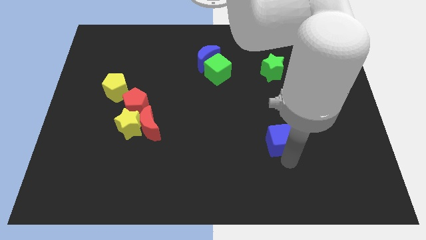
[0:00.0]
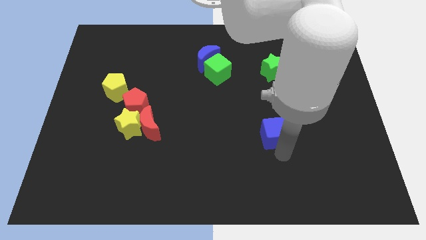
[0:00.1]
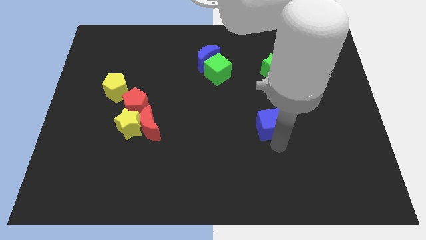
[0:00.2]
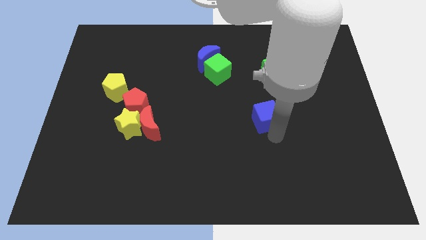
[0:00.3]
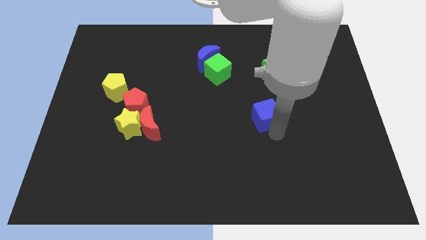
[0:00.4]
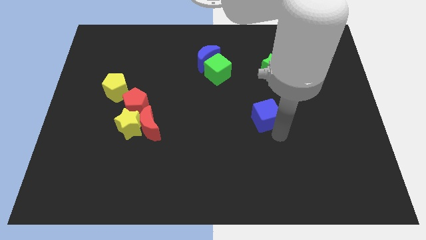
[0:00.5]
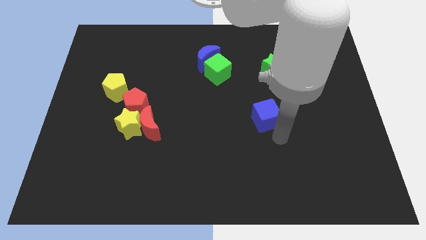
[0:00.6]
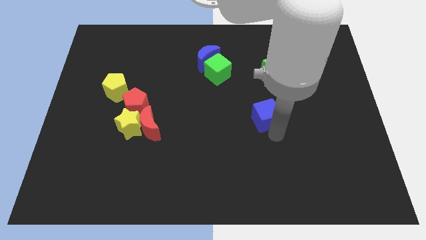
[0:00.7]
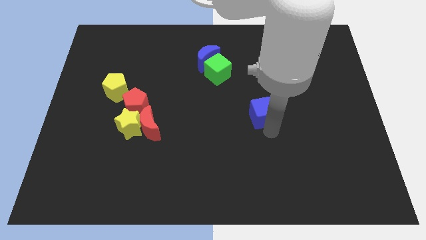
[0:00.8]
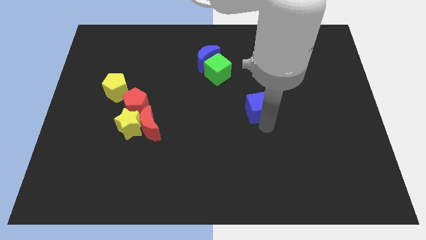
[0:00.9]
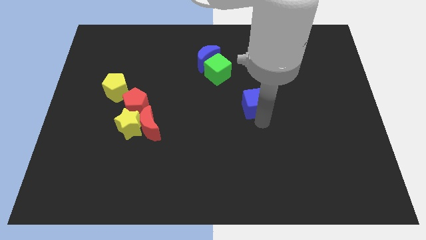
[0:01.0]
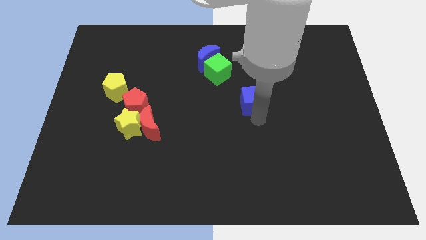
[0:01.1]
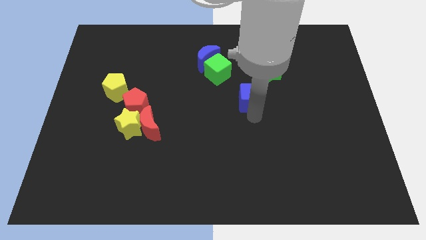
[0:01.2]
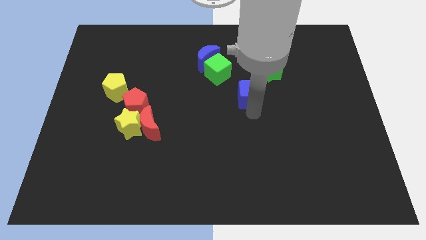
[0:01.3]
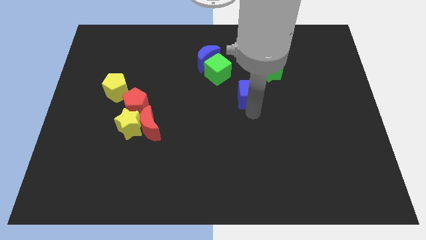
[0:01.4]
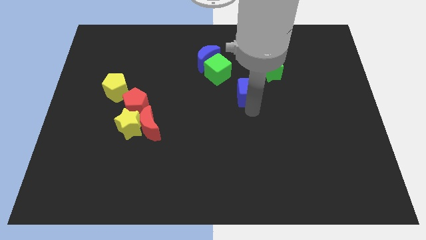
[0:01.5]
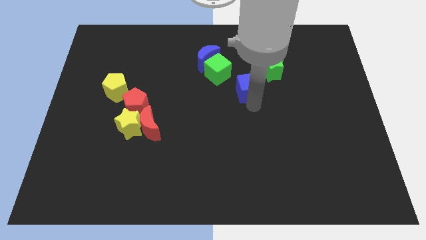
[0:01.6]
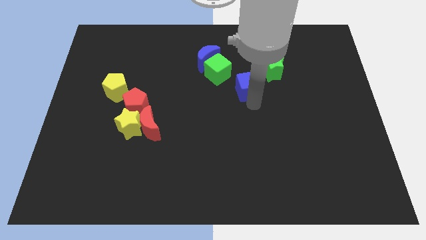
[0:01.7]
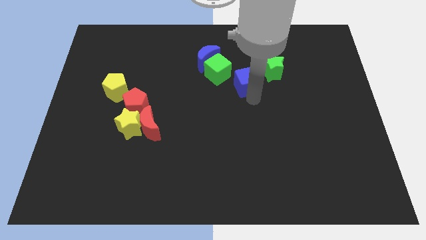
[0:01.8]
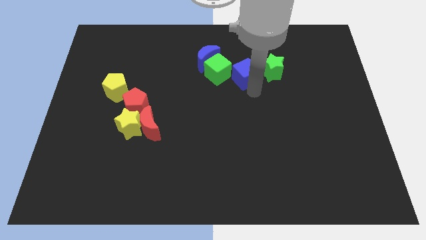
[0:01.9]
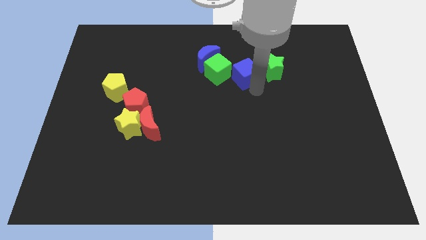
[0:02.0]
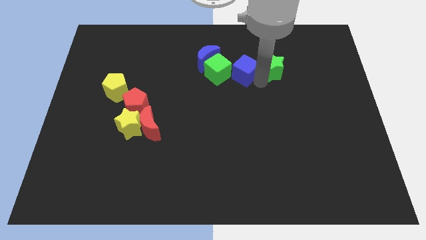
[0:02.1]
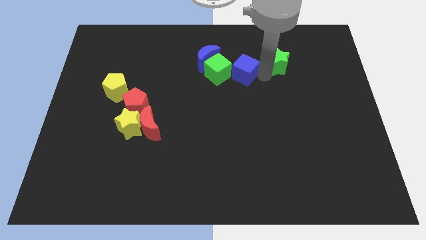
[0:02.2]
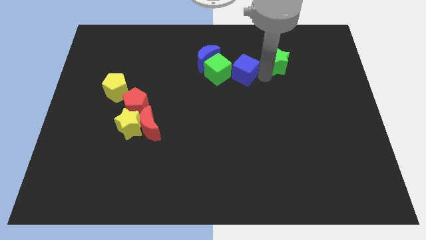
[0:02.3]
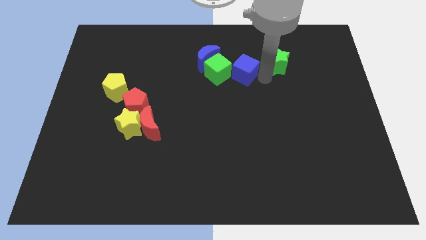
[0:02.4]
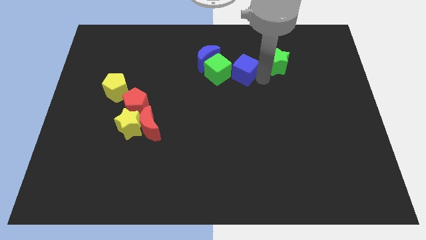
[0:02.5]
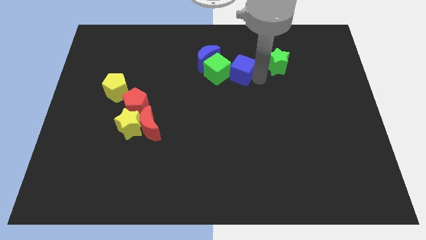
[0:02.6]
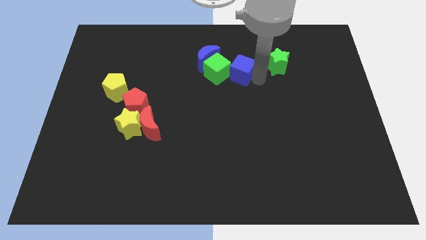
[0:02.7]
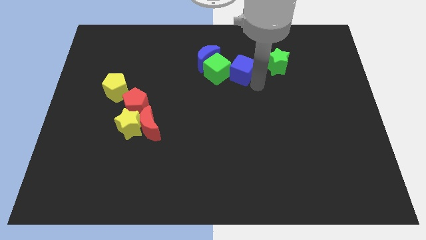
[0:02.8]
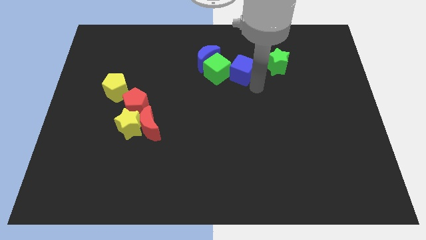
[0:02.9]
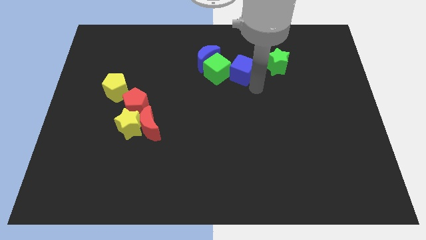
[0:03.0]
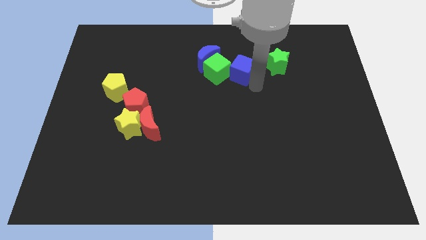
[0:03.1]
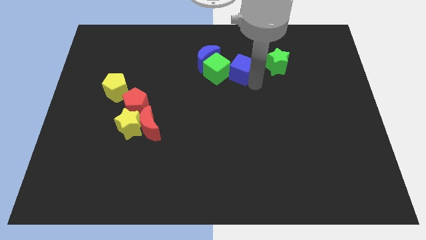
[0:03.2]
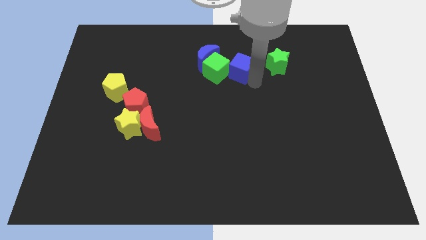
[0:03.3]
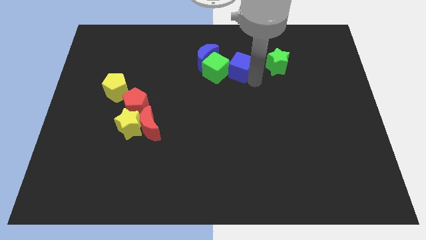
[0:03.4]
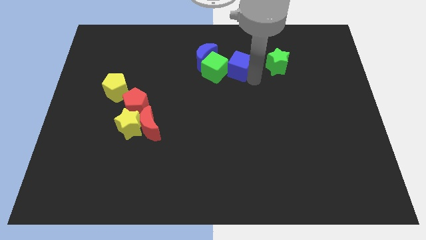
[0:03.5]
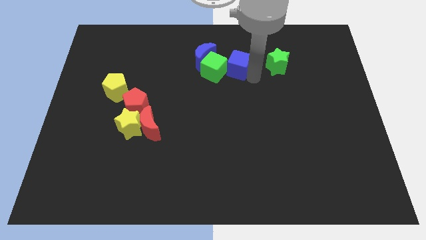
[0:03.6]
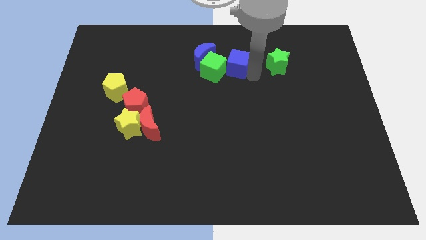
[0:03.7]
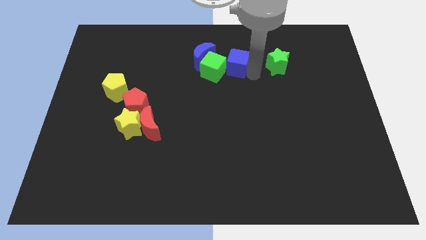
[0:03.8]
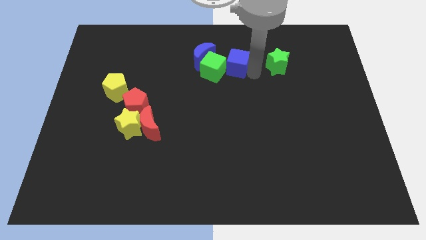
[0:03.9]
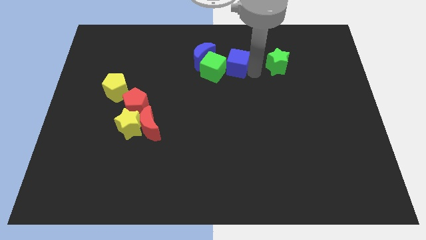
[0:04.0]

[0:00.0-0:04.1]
push the blue cube into the green cube

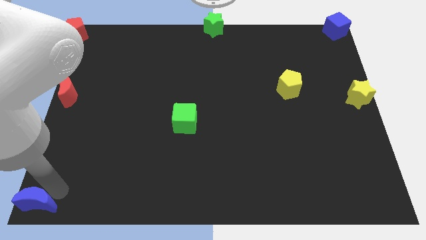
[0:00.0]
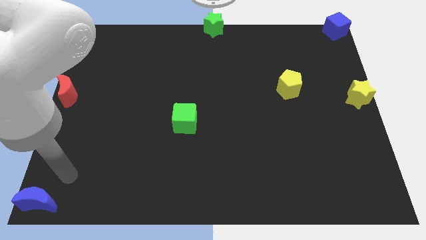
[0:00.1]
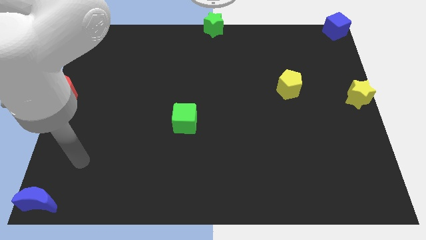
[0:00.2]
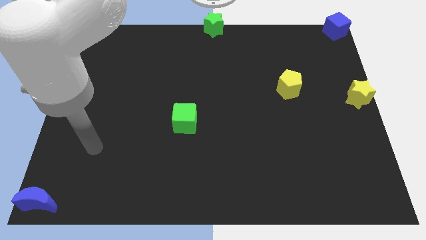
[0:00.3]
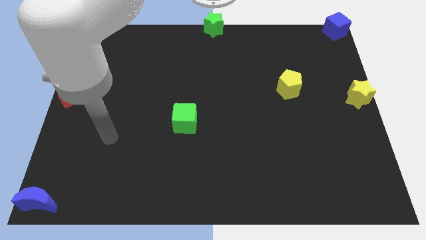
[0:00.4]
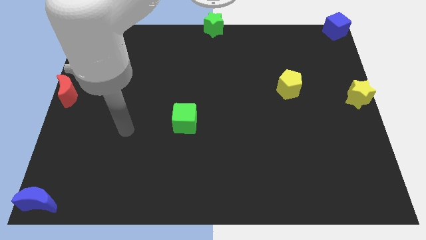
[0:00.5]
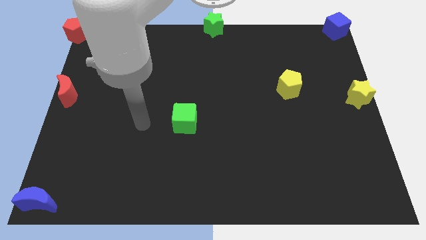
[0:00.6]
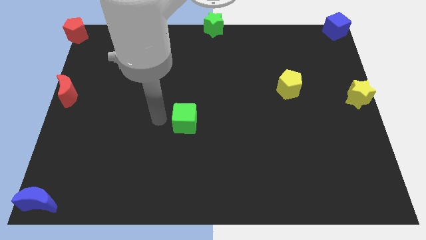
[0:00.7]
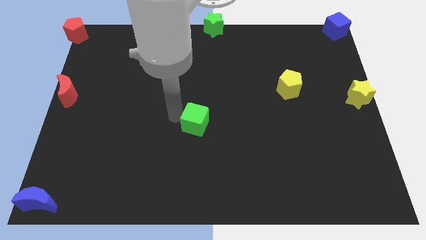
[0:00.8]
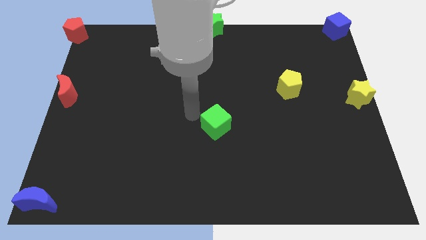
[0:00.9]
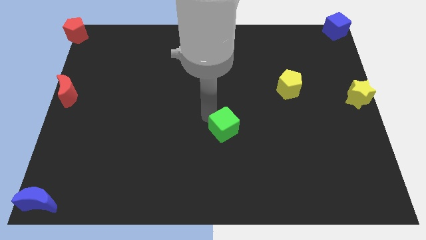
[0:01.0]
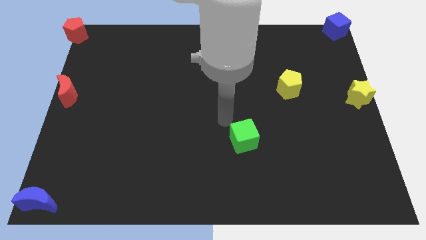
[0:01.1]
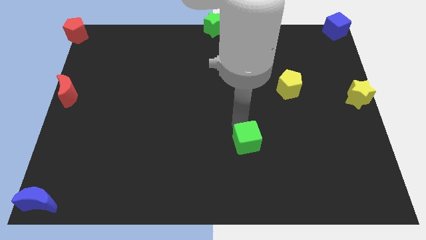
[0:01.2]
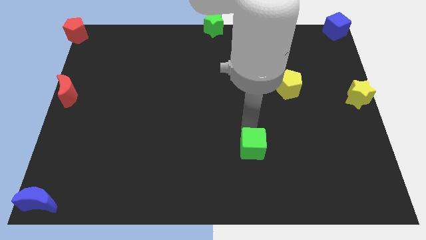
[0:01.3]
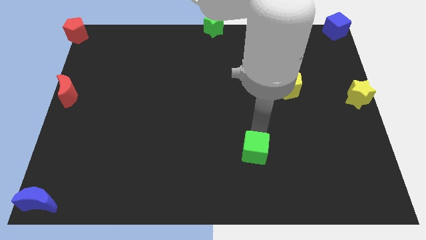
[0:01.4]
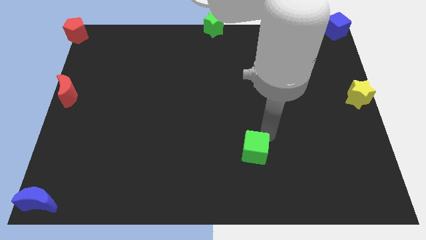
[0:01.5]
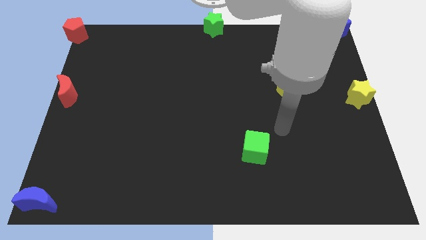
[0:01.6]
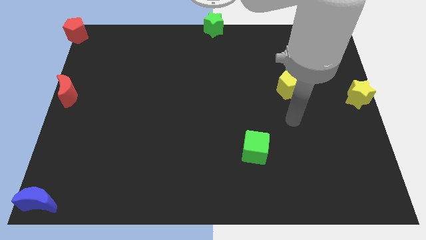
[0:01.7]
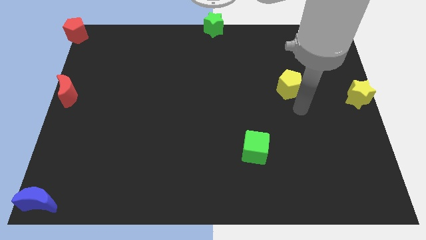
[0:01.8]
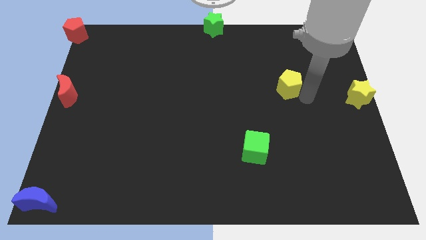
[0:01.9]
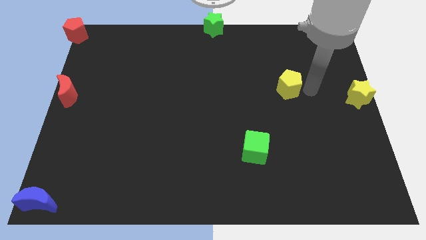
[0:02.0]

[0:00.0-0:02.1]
push the green cube diagonally down

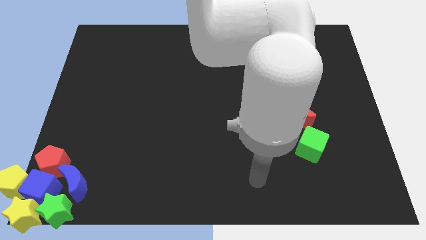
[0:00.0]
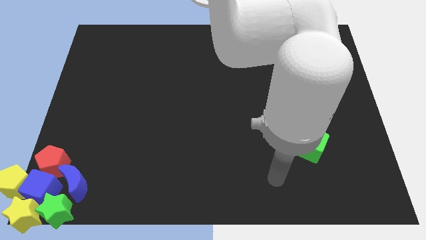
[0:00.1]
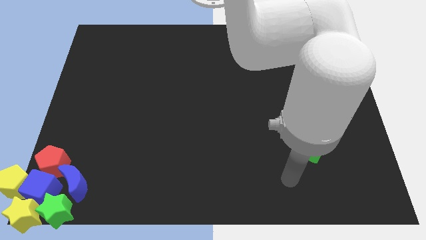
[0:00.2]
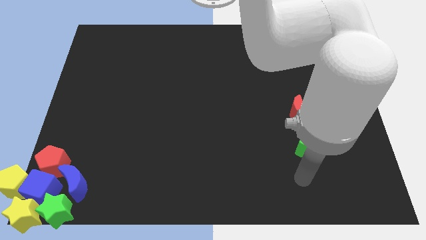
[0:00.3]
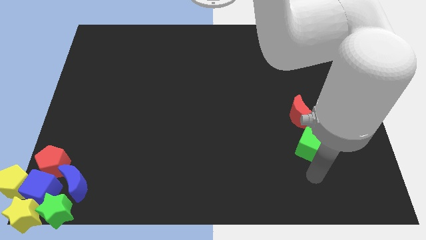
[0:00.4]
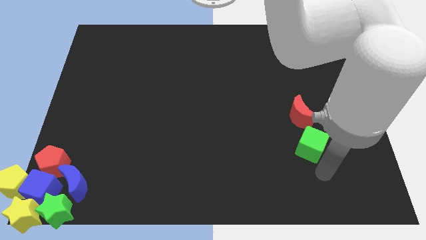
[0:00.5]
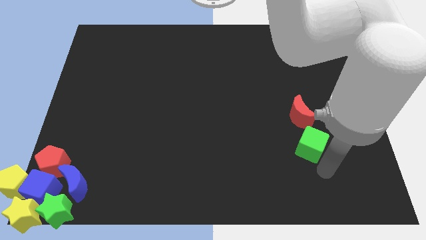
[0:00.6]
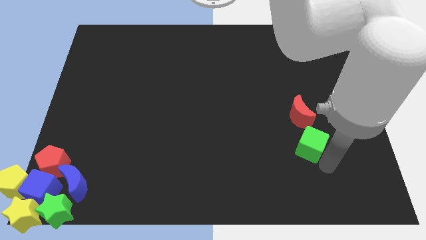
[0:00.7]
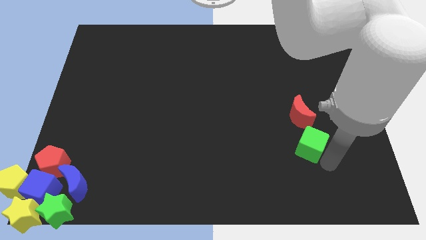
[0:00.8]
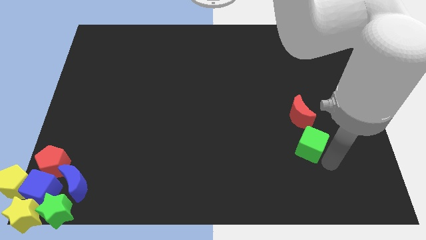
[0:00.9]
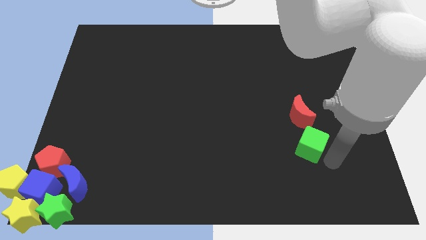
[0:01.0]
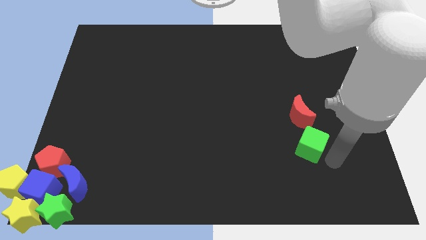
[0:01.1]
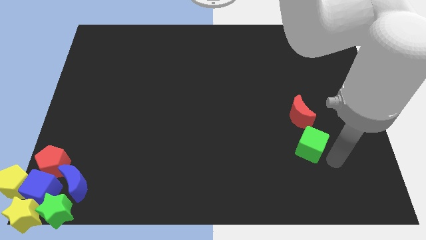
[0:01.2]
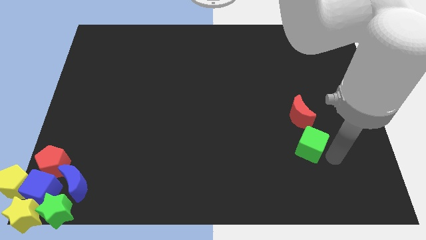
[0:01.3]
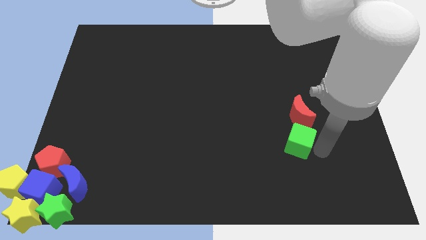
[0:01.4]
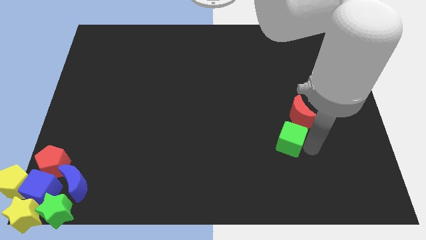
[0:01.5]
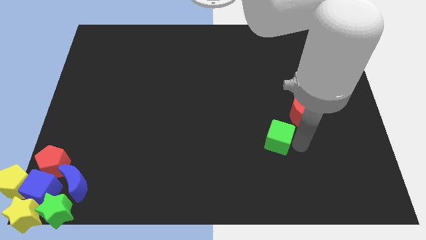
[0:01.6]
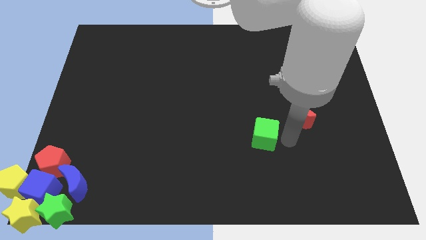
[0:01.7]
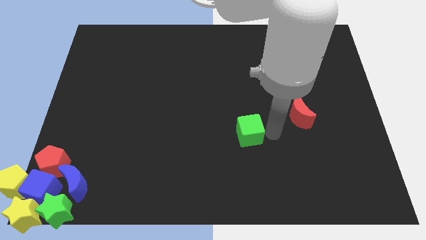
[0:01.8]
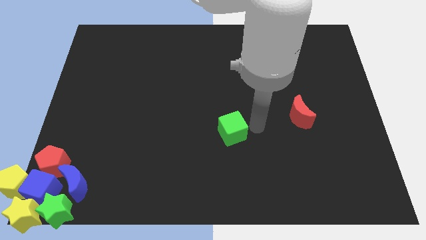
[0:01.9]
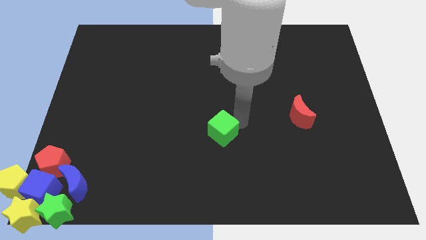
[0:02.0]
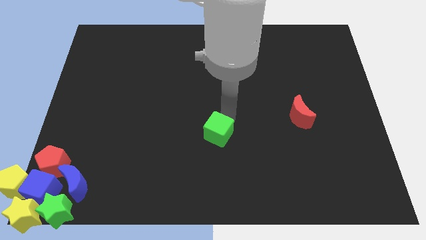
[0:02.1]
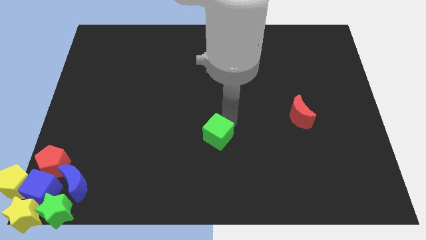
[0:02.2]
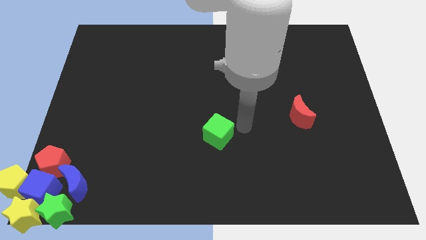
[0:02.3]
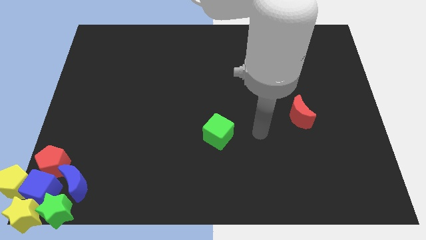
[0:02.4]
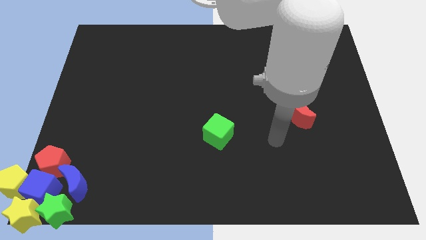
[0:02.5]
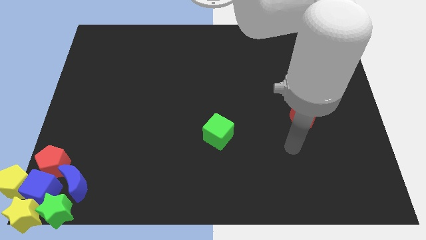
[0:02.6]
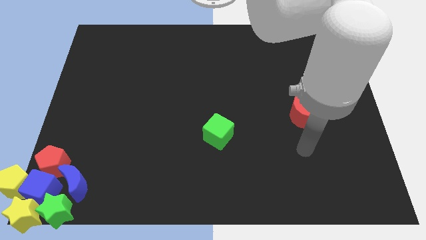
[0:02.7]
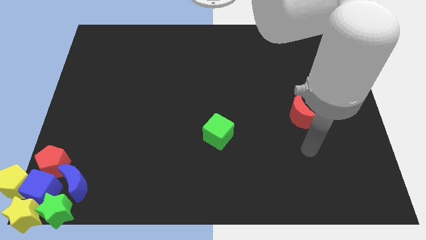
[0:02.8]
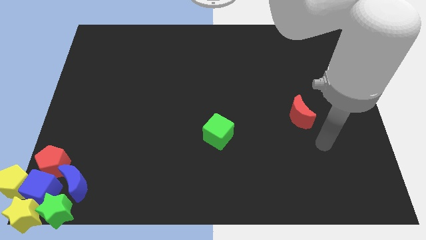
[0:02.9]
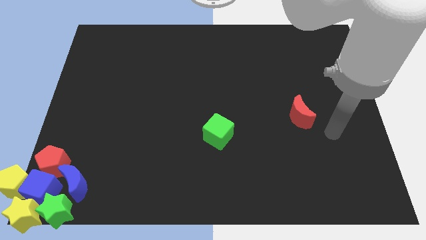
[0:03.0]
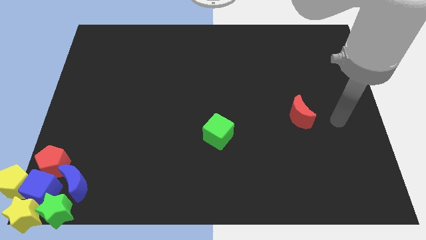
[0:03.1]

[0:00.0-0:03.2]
slightly push the green cube to the left of the board
